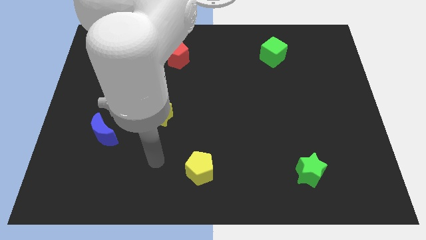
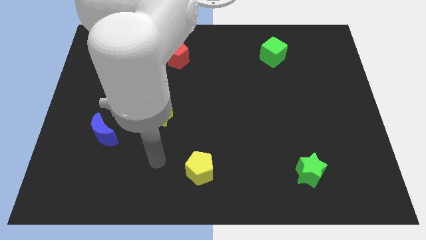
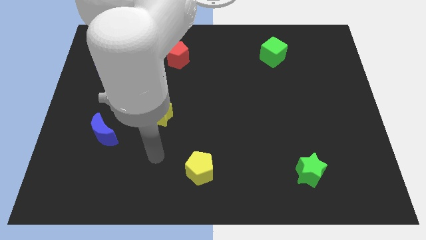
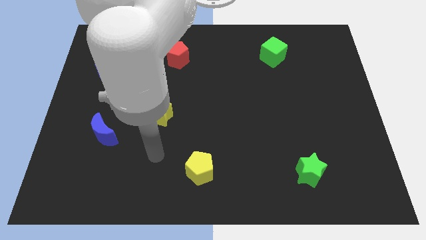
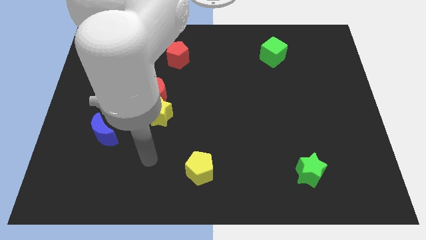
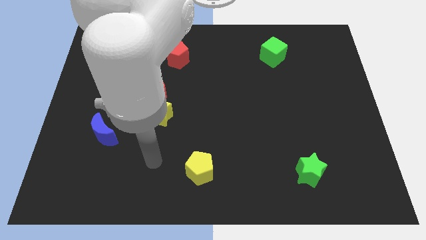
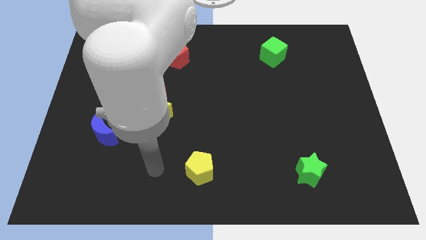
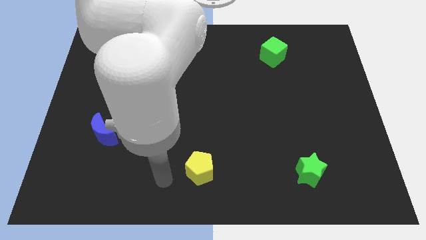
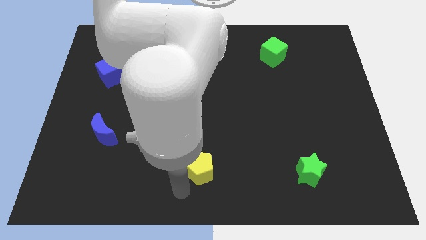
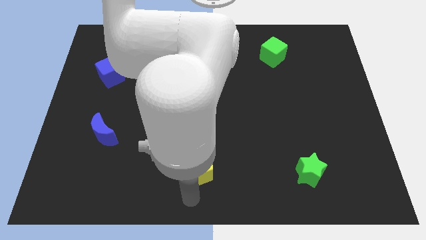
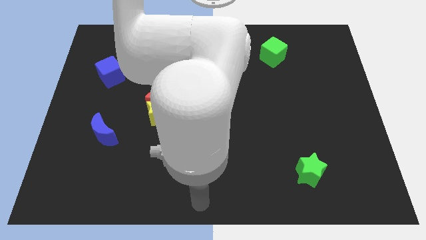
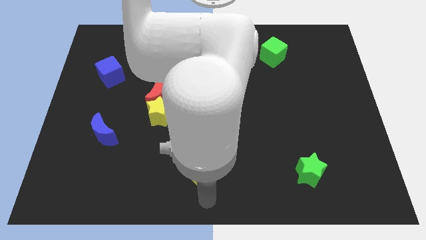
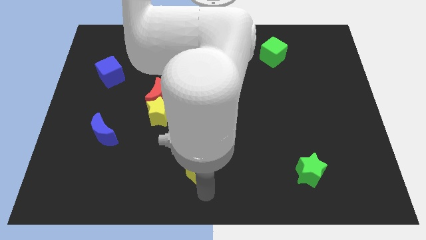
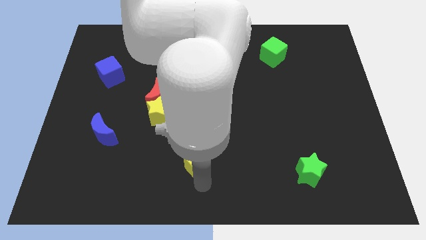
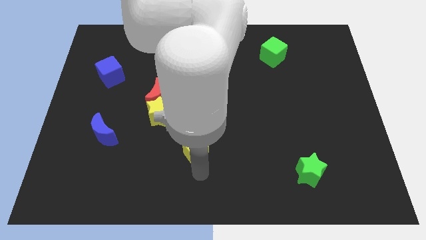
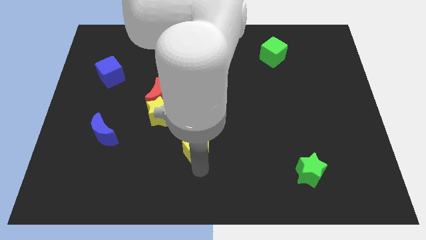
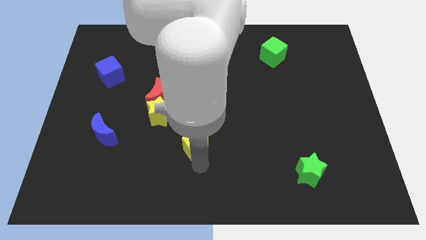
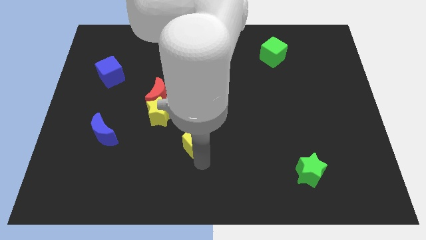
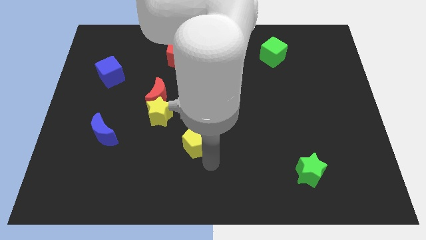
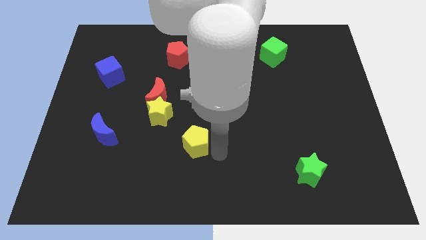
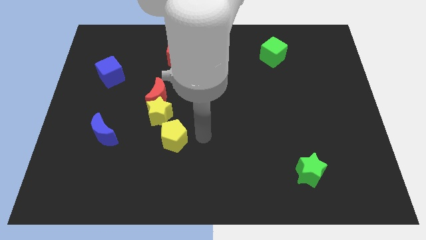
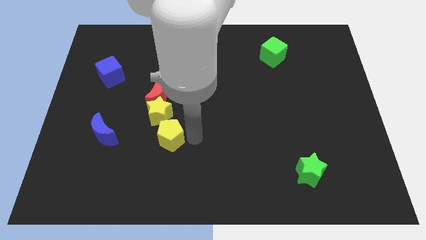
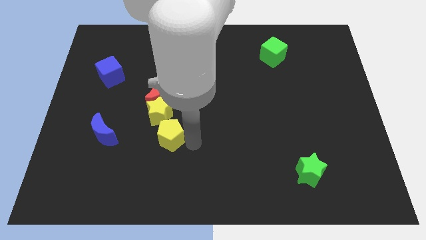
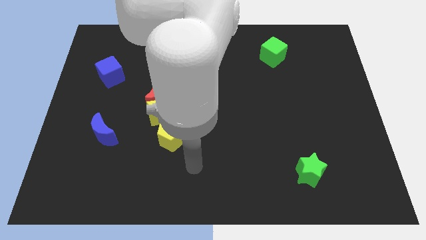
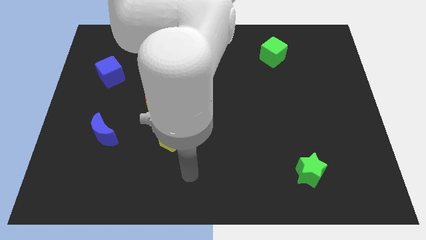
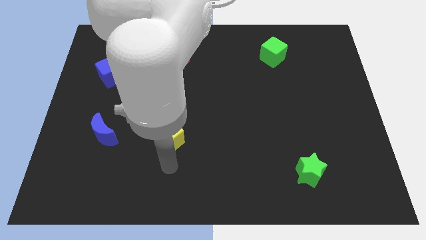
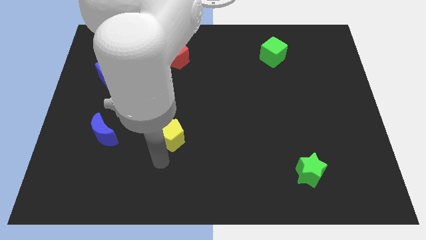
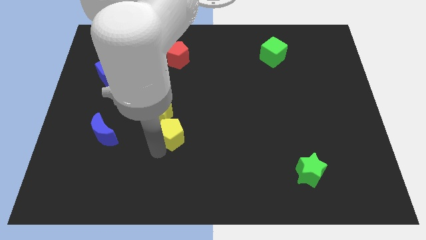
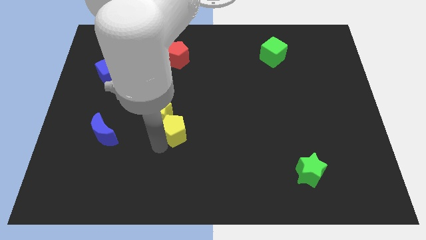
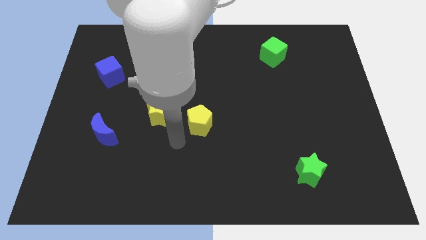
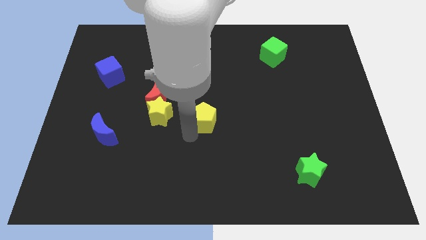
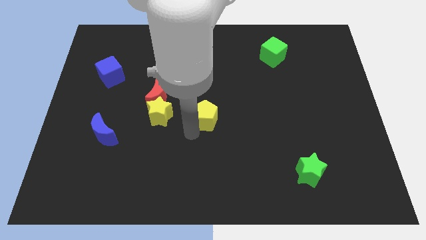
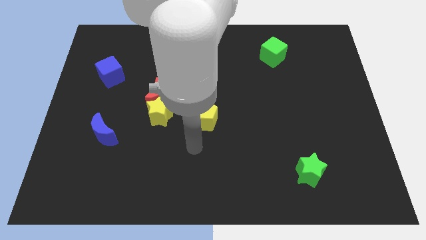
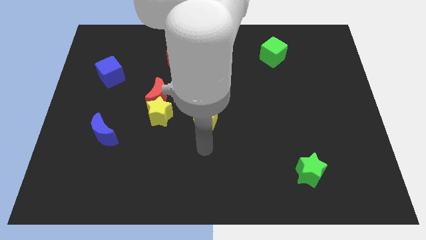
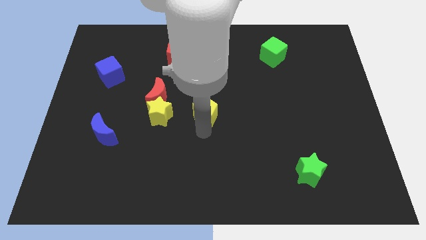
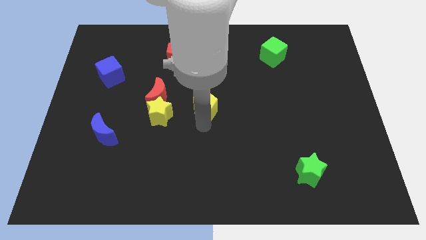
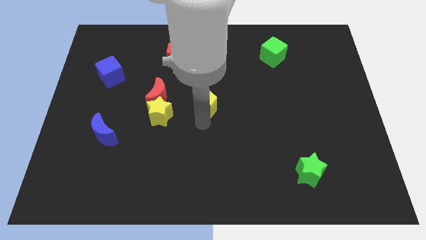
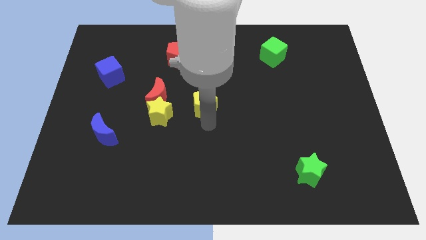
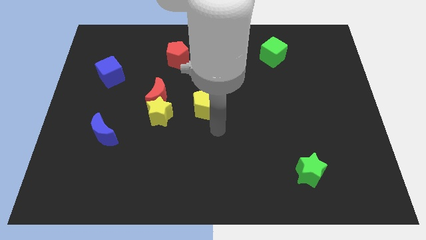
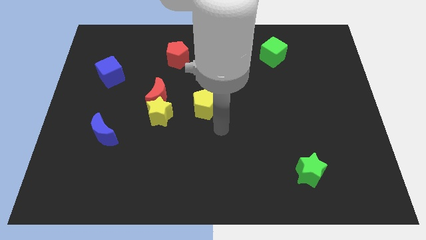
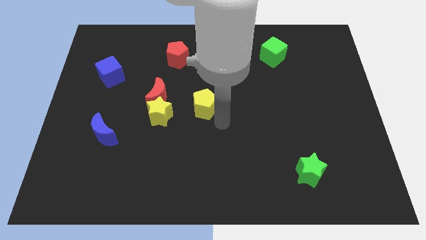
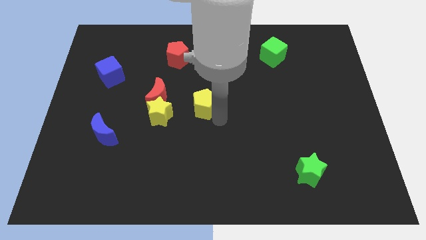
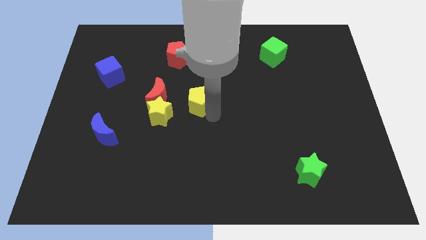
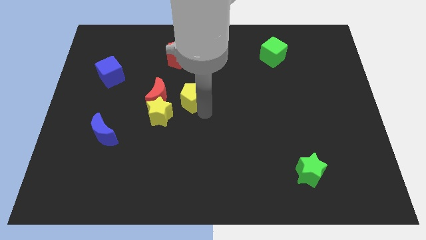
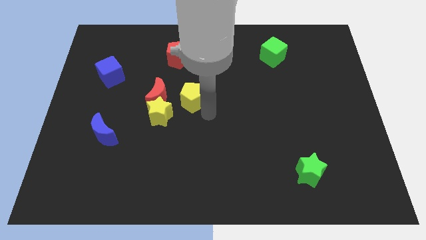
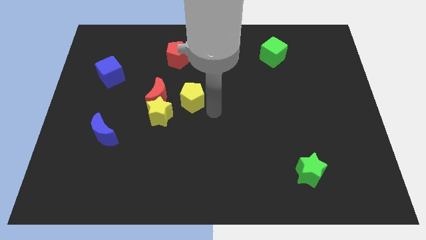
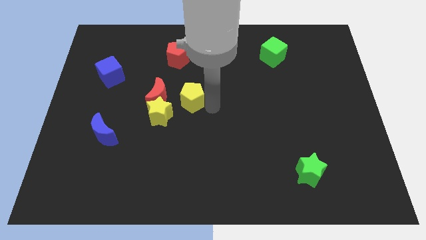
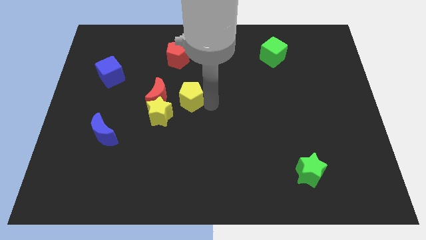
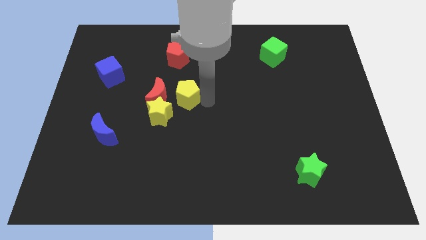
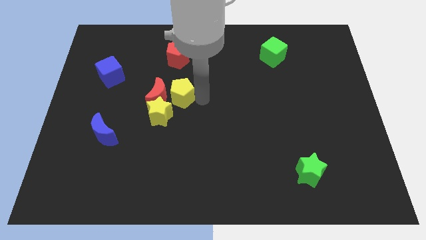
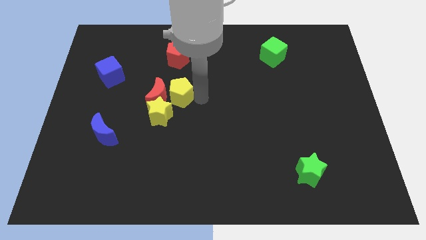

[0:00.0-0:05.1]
move the yellow pentagon to the red moon

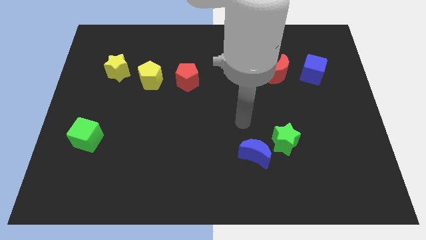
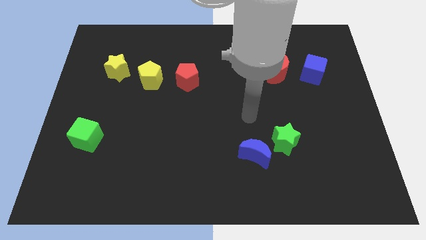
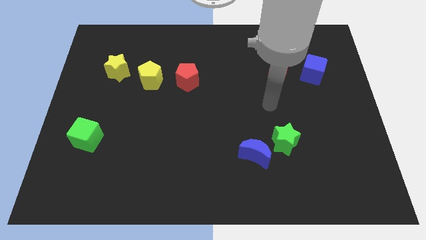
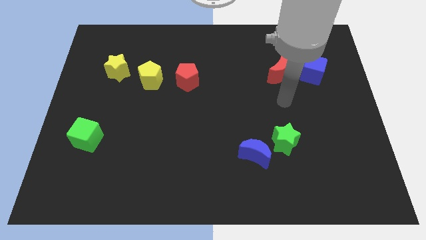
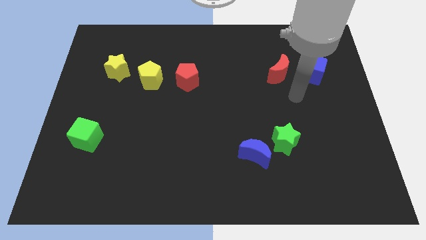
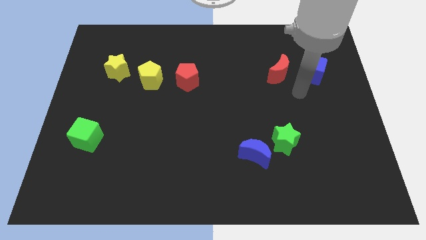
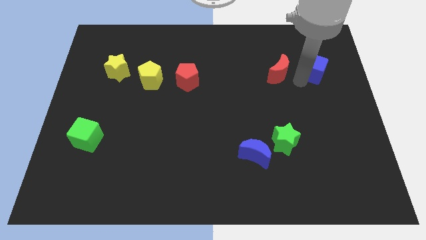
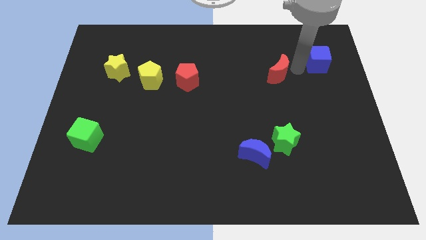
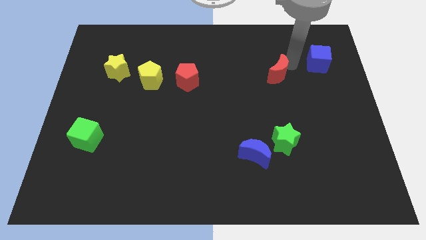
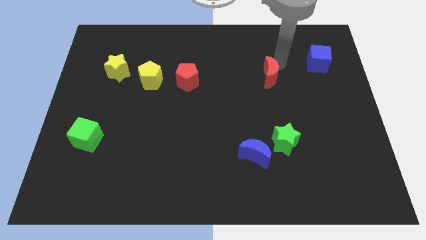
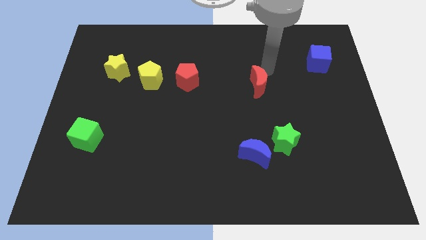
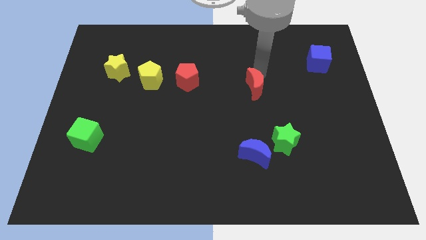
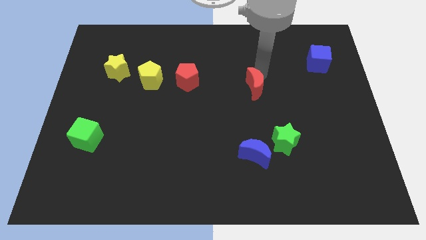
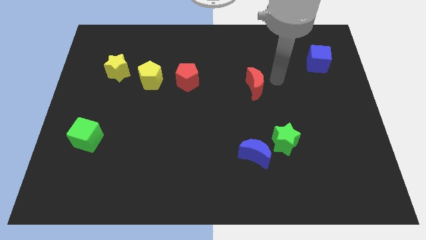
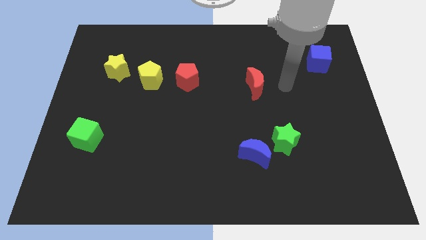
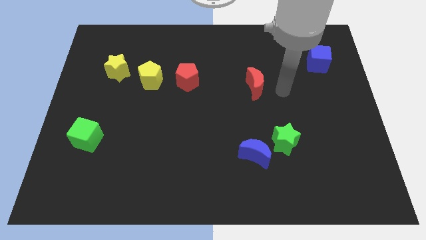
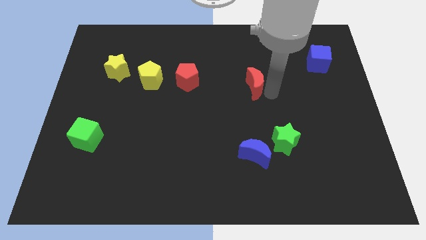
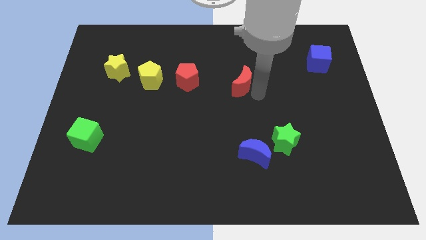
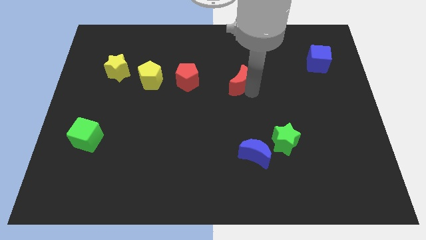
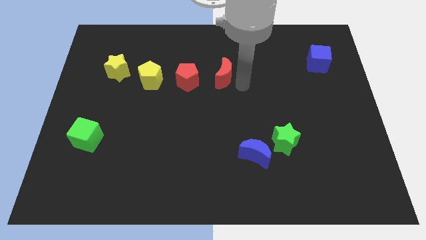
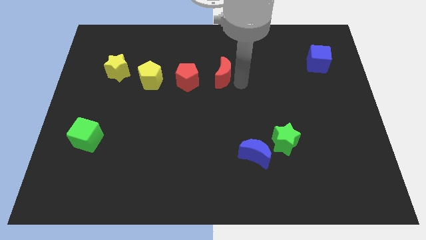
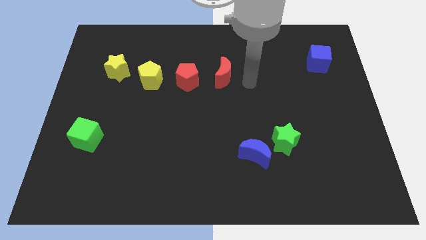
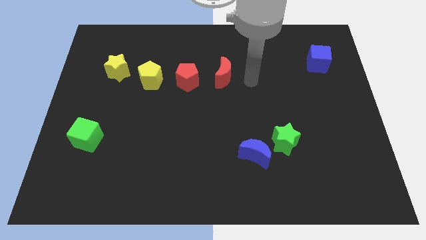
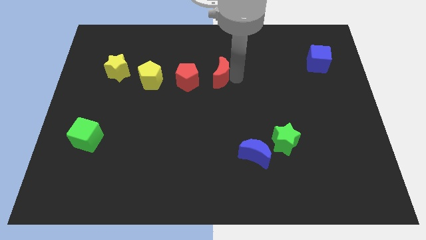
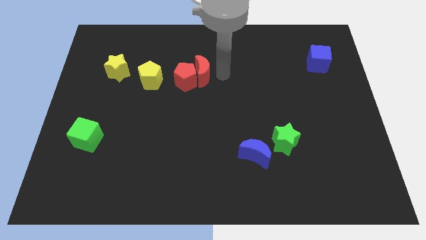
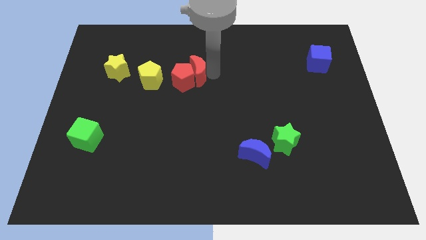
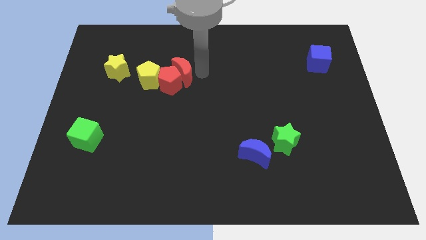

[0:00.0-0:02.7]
put the red moon next to the red pentagon
